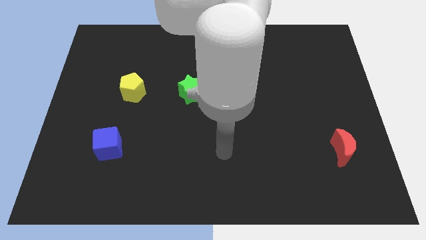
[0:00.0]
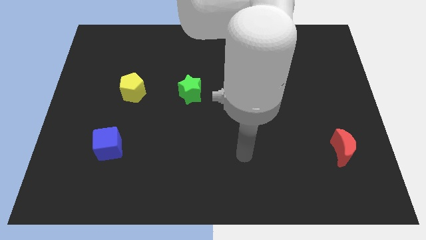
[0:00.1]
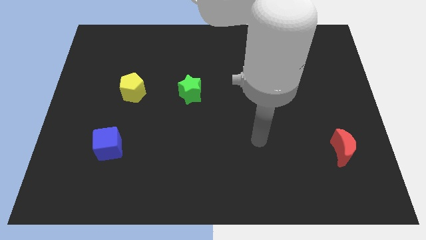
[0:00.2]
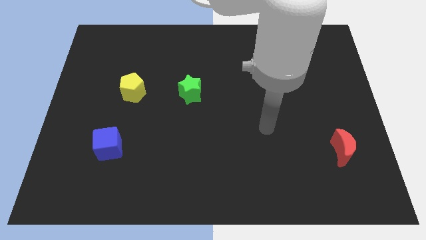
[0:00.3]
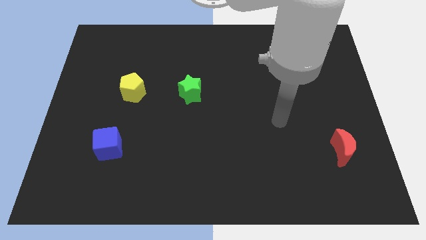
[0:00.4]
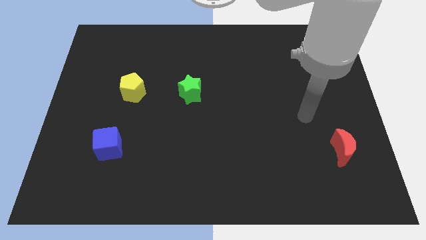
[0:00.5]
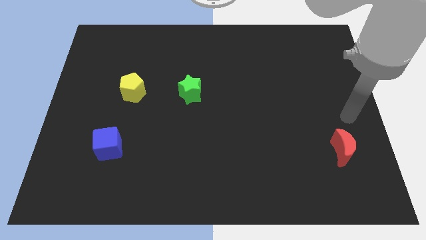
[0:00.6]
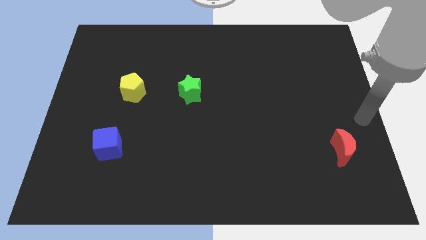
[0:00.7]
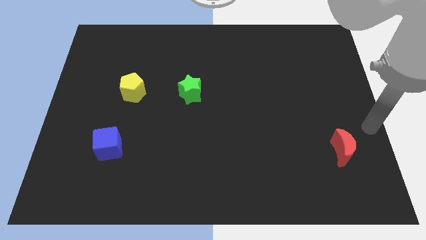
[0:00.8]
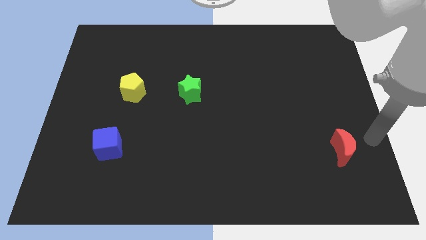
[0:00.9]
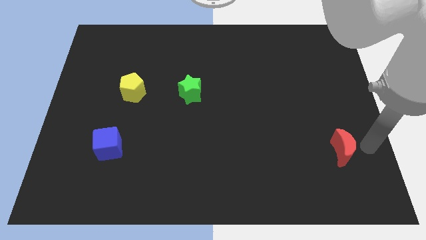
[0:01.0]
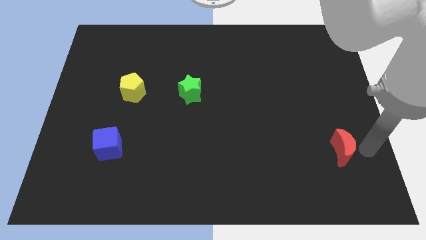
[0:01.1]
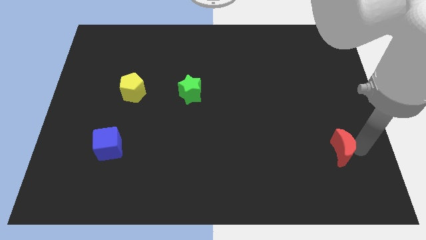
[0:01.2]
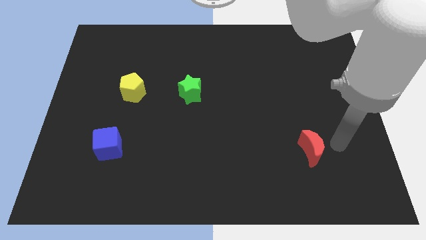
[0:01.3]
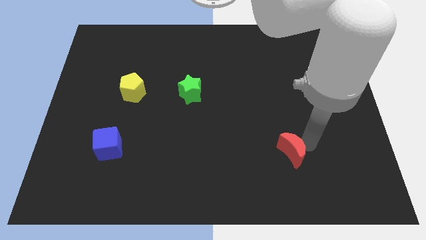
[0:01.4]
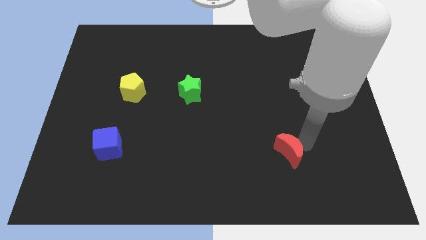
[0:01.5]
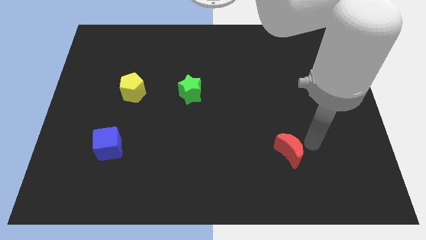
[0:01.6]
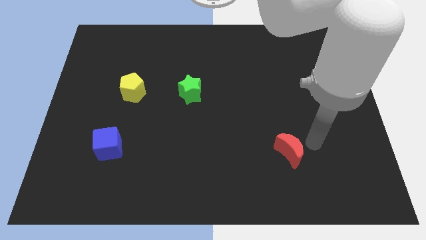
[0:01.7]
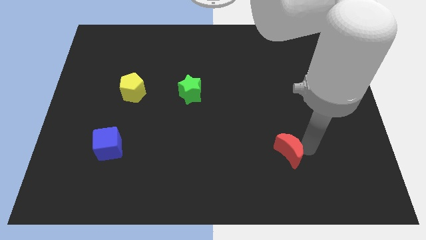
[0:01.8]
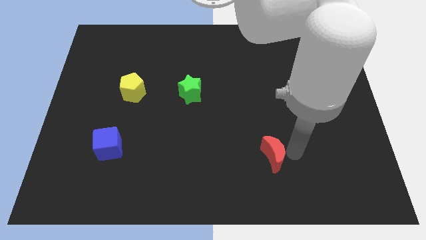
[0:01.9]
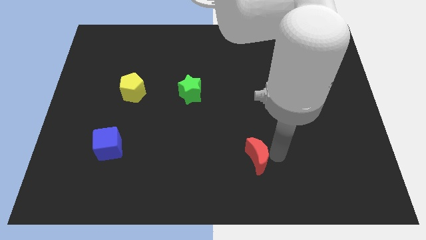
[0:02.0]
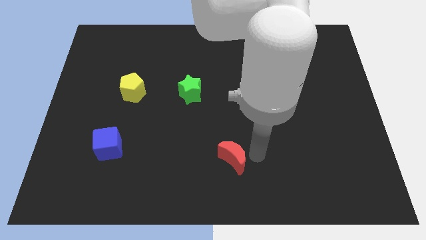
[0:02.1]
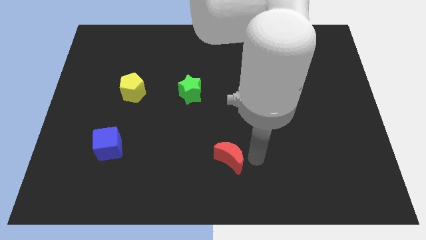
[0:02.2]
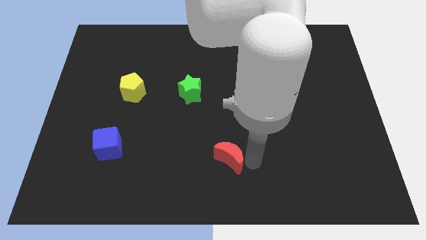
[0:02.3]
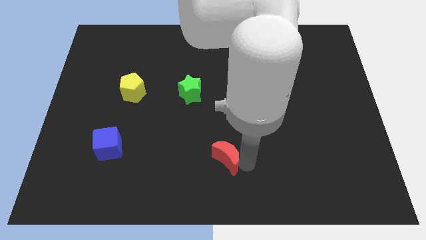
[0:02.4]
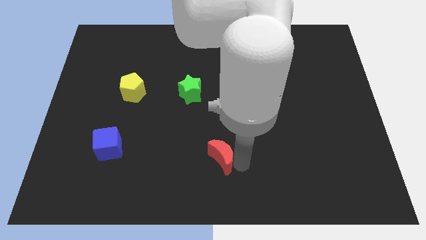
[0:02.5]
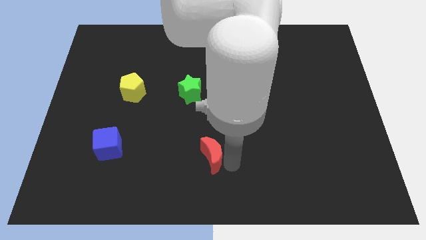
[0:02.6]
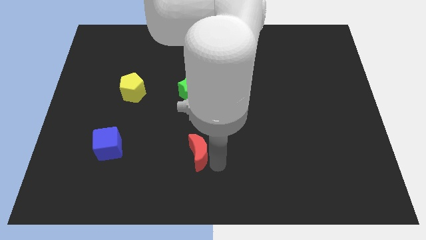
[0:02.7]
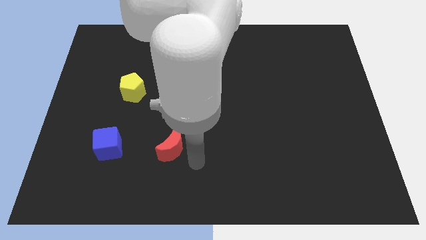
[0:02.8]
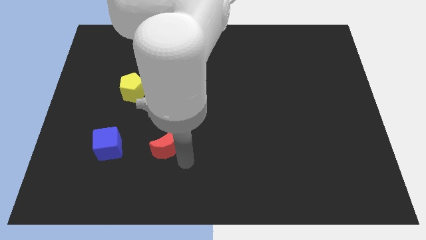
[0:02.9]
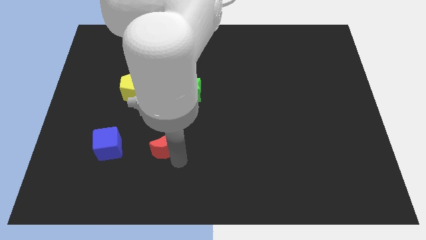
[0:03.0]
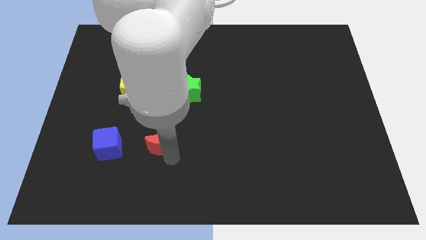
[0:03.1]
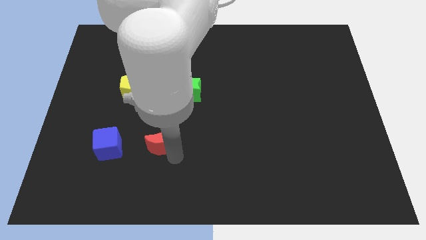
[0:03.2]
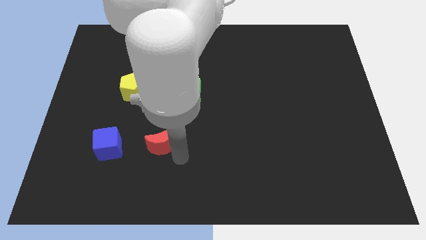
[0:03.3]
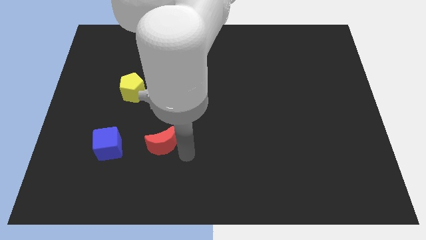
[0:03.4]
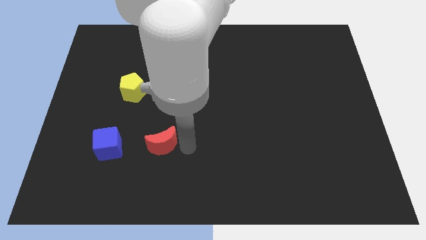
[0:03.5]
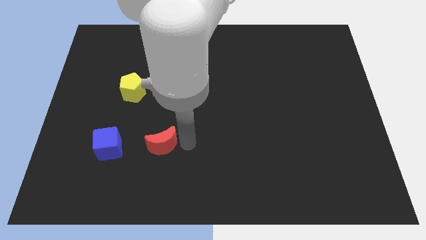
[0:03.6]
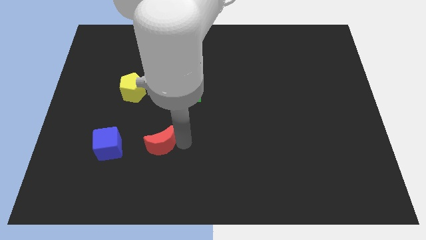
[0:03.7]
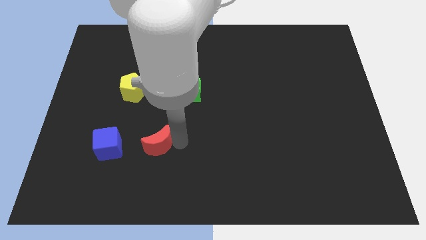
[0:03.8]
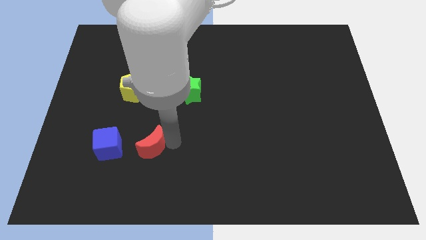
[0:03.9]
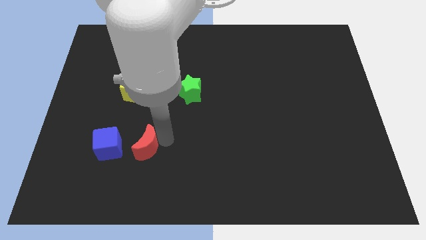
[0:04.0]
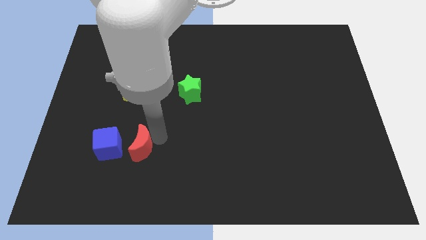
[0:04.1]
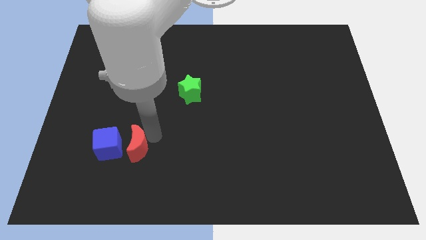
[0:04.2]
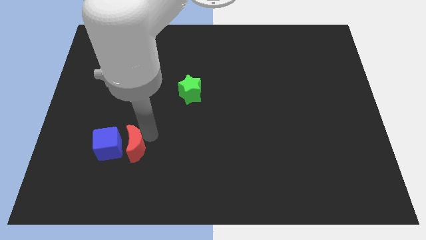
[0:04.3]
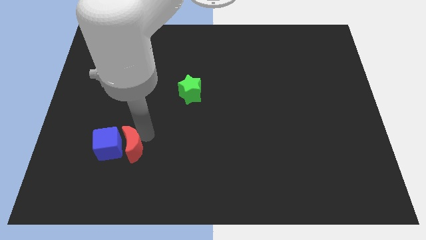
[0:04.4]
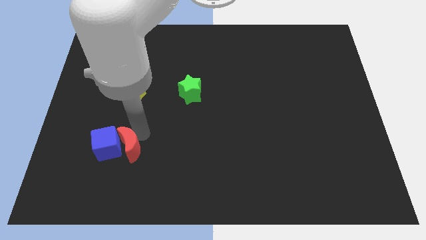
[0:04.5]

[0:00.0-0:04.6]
put the moon next to the blue cube

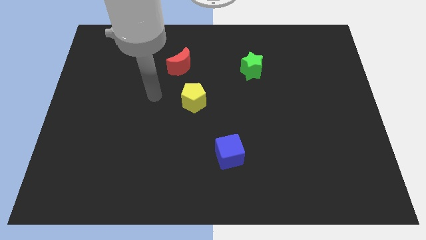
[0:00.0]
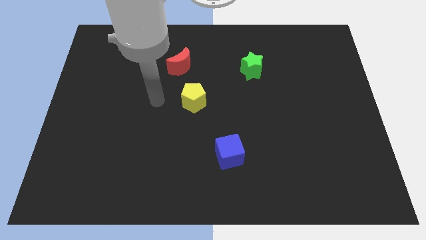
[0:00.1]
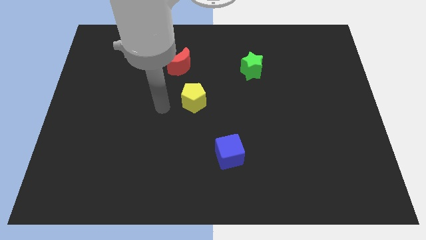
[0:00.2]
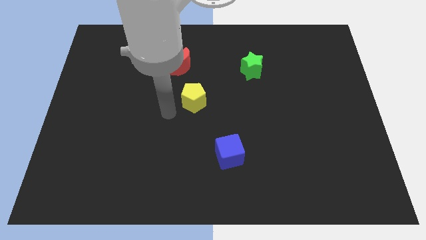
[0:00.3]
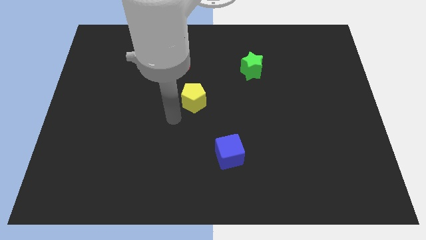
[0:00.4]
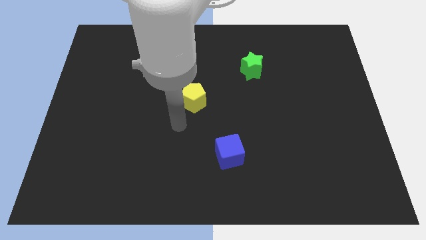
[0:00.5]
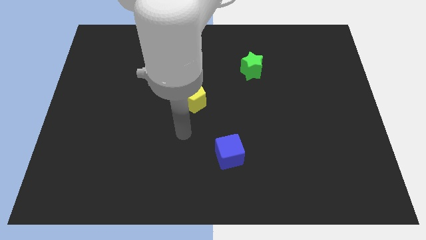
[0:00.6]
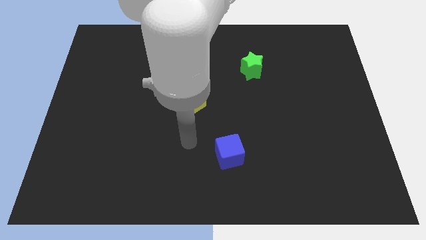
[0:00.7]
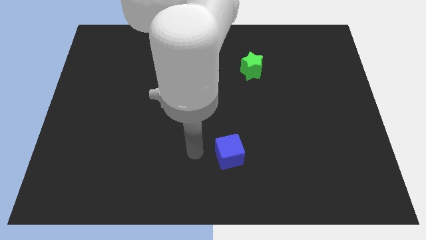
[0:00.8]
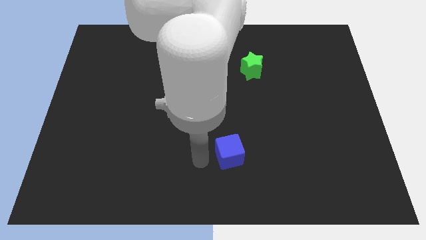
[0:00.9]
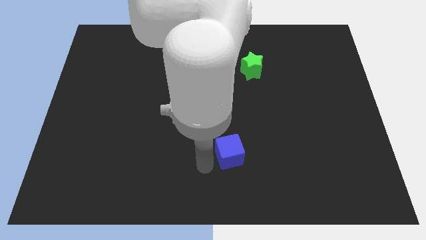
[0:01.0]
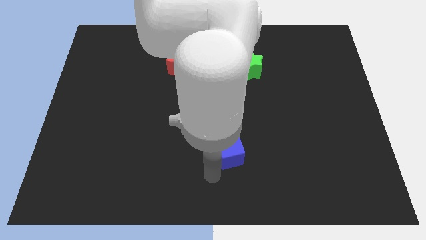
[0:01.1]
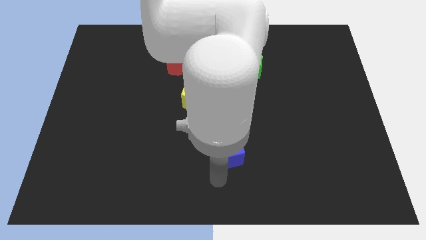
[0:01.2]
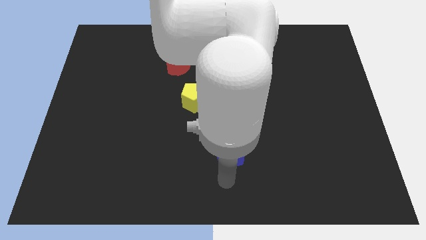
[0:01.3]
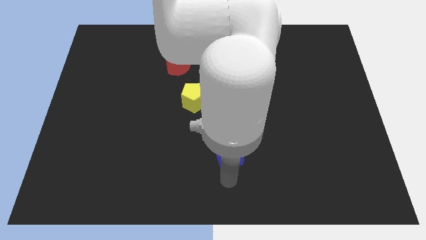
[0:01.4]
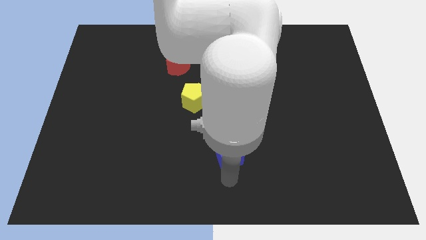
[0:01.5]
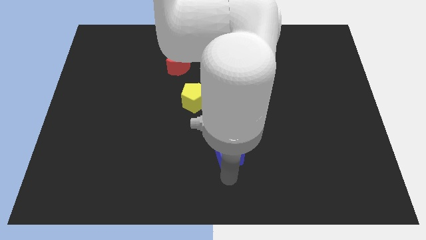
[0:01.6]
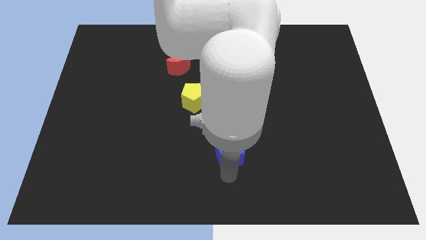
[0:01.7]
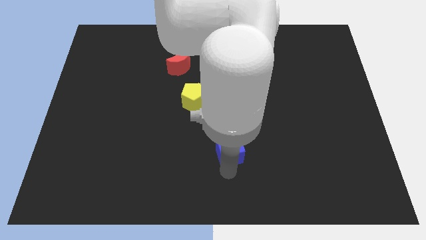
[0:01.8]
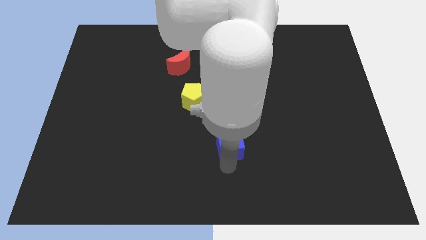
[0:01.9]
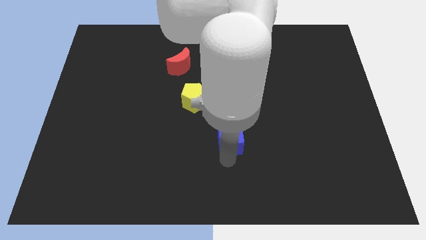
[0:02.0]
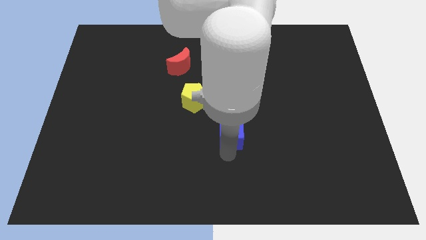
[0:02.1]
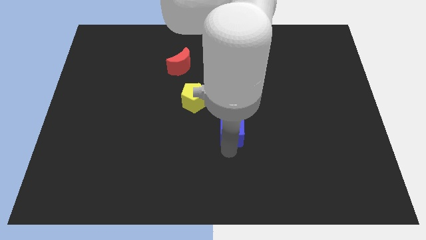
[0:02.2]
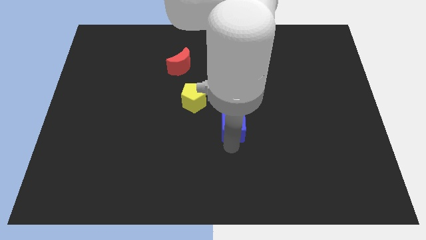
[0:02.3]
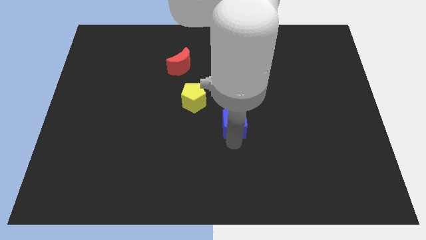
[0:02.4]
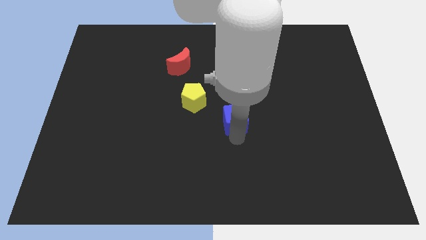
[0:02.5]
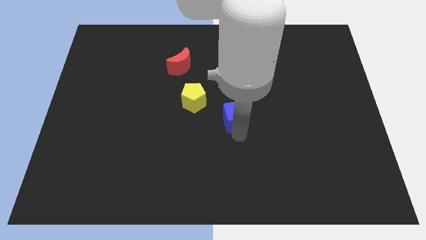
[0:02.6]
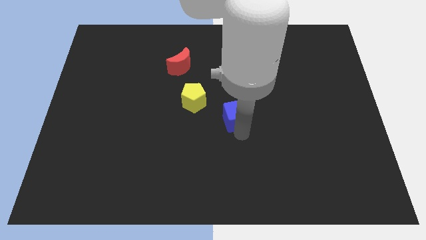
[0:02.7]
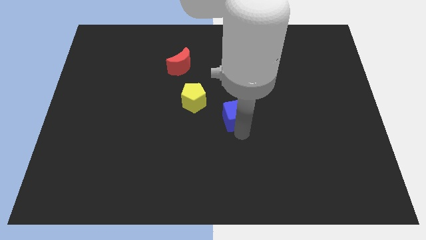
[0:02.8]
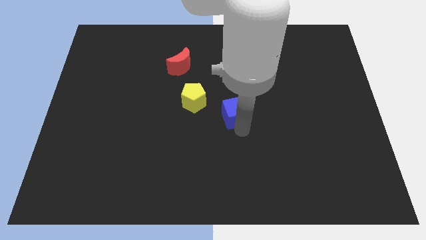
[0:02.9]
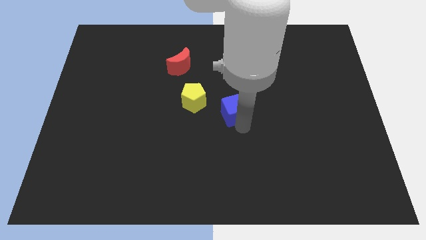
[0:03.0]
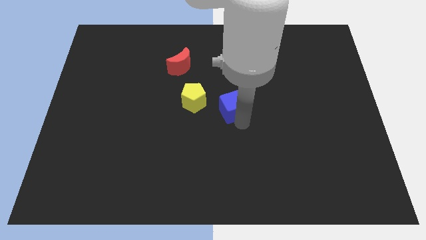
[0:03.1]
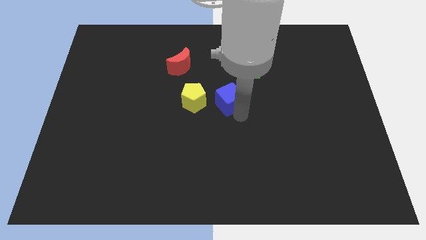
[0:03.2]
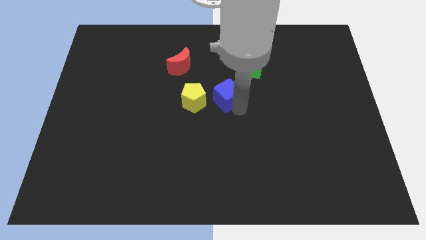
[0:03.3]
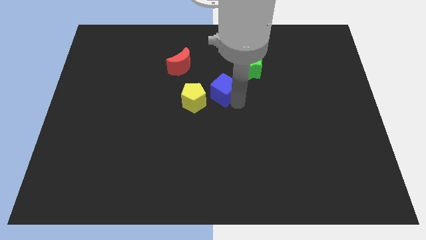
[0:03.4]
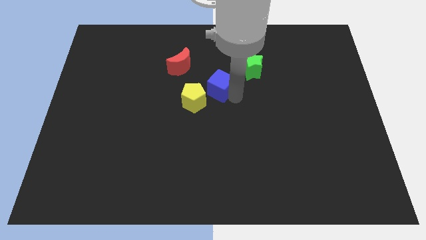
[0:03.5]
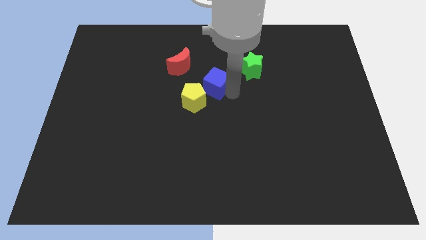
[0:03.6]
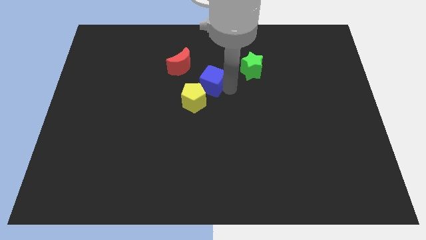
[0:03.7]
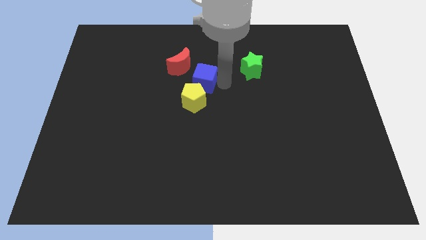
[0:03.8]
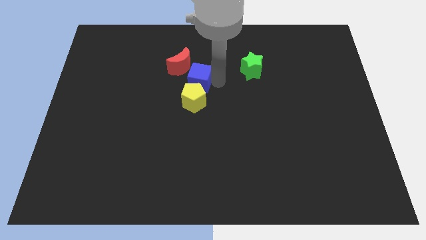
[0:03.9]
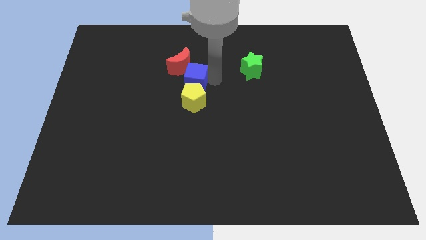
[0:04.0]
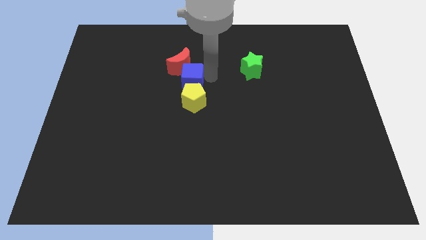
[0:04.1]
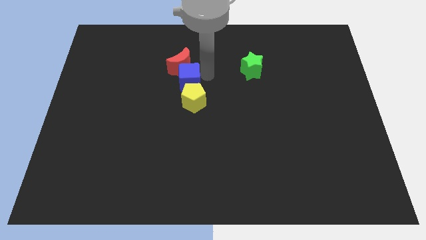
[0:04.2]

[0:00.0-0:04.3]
move the blue cube next to the red moon
